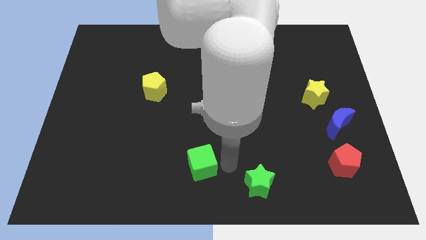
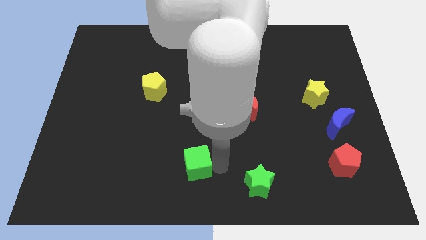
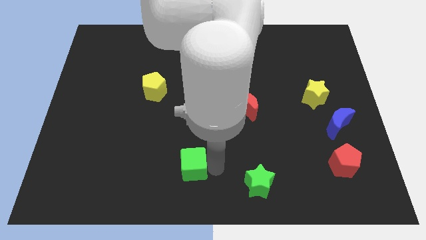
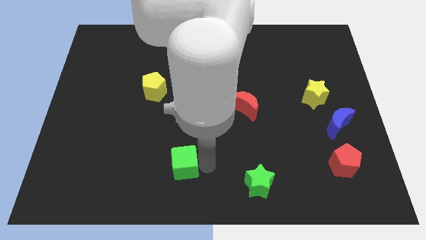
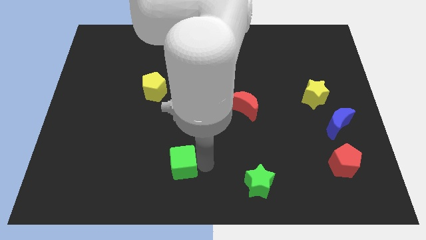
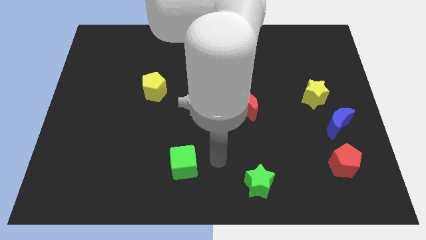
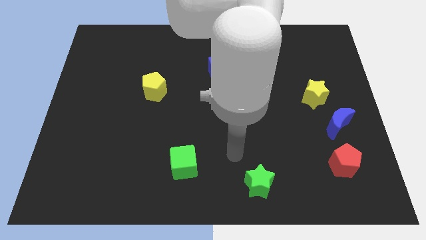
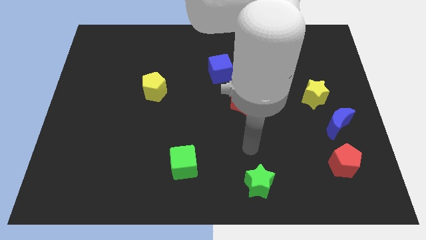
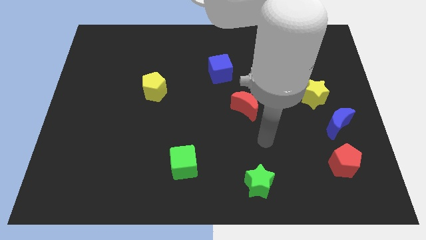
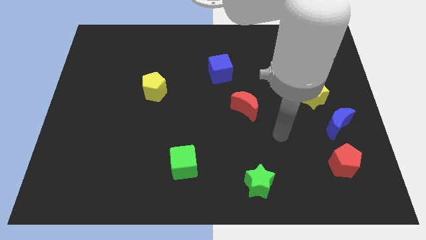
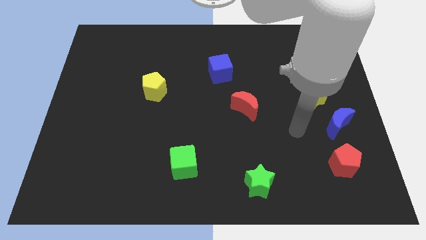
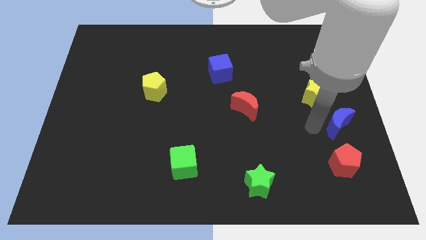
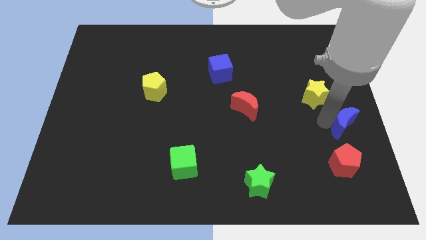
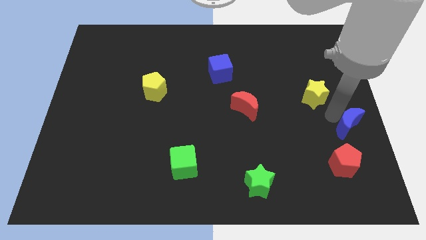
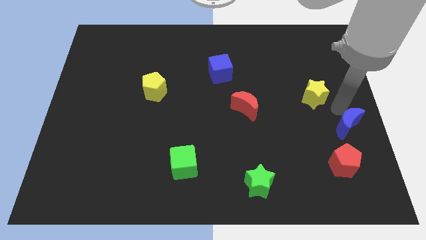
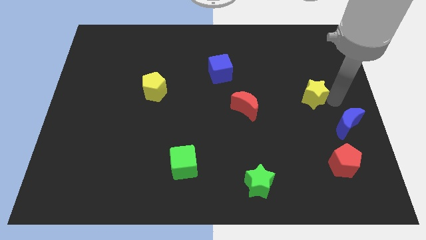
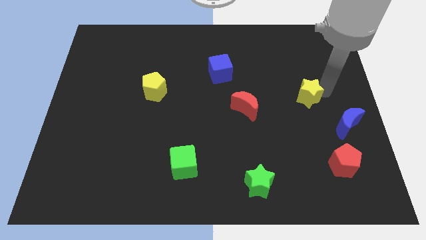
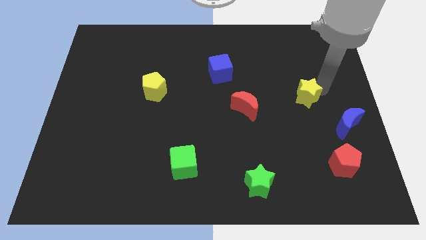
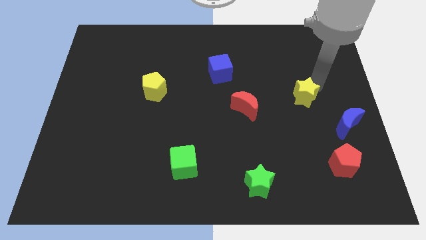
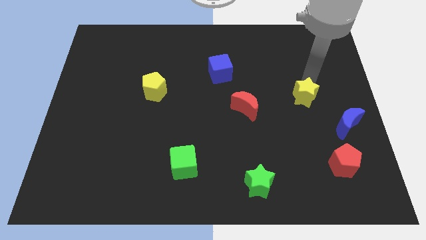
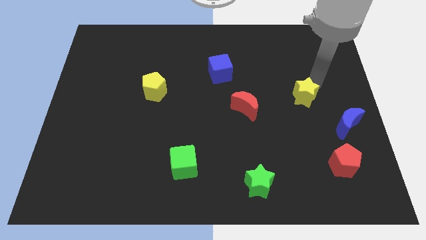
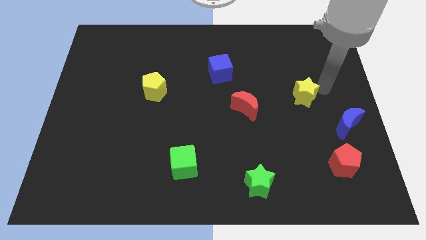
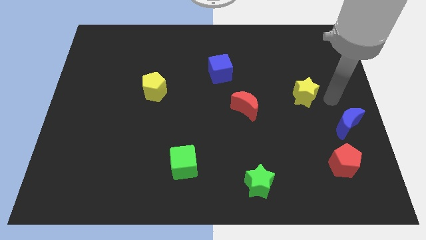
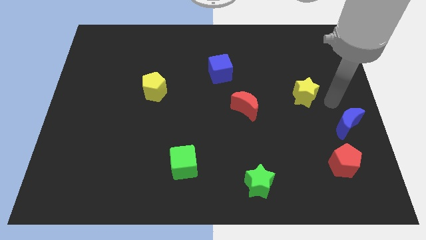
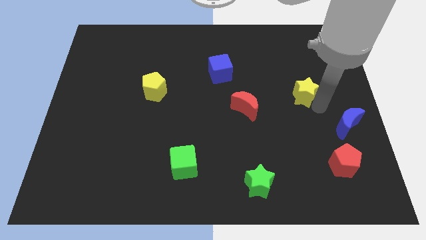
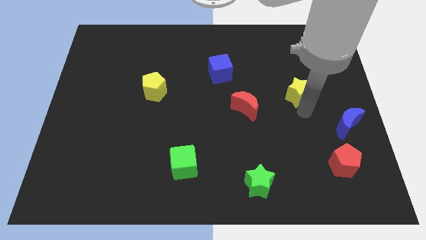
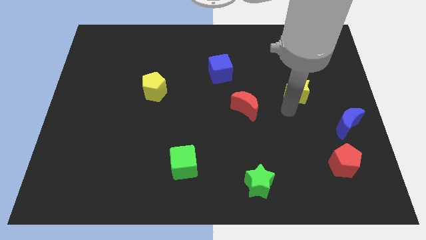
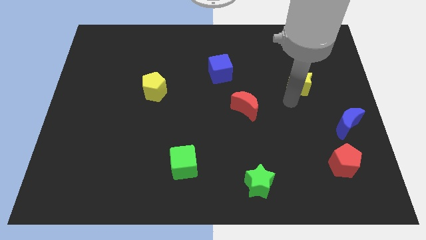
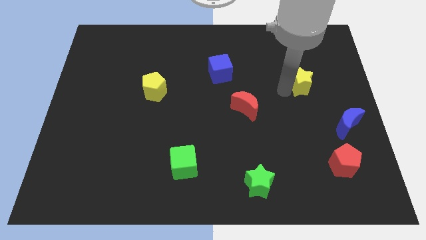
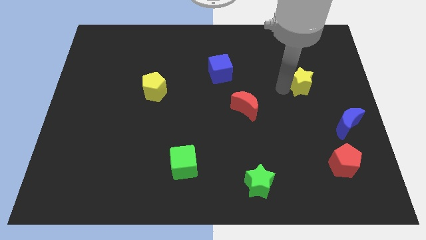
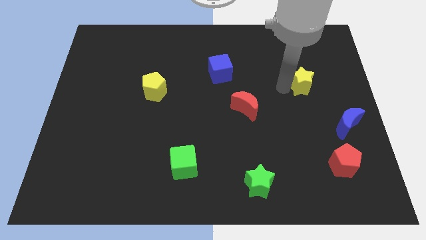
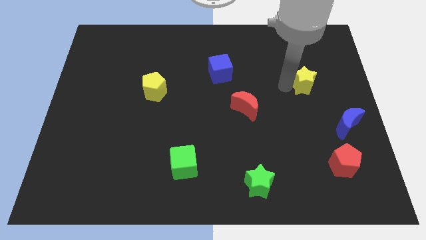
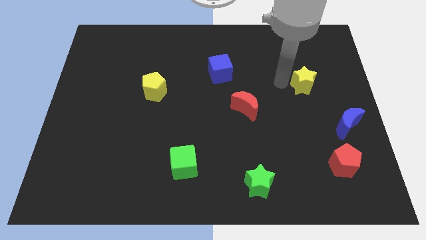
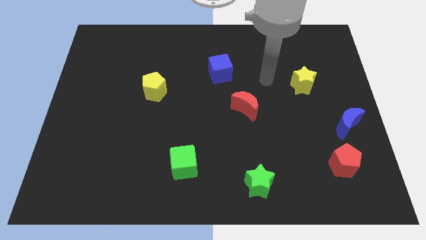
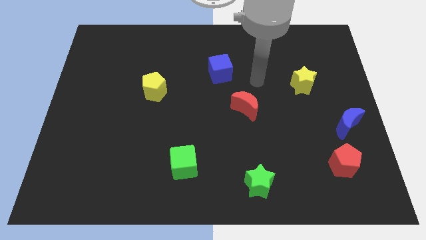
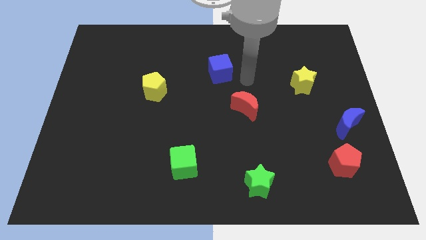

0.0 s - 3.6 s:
move your arm away from the green cube

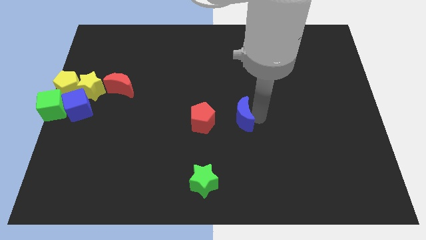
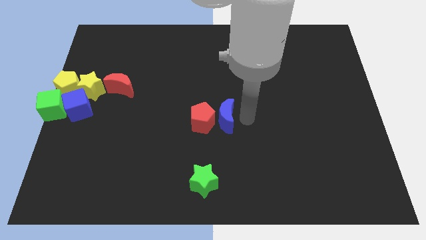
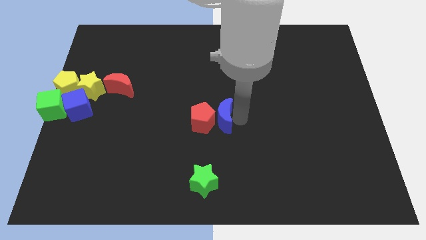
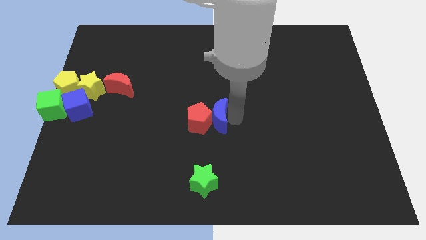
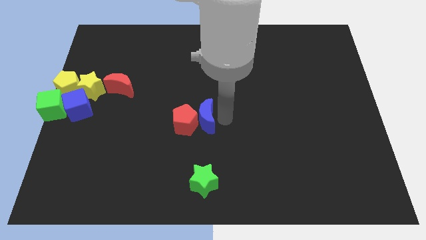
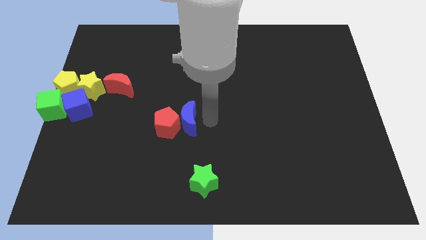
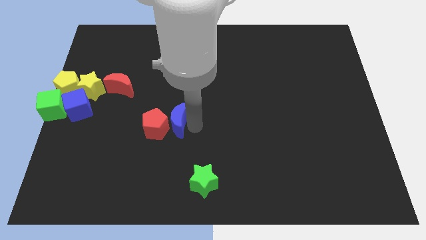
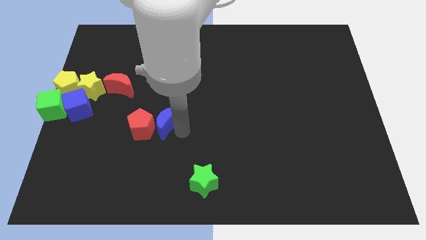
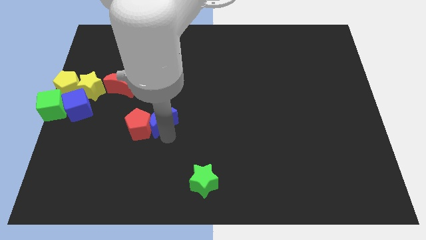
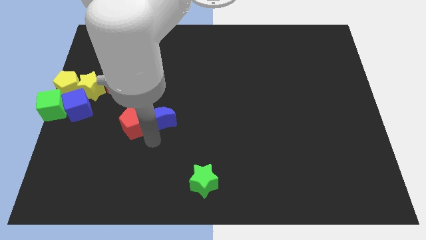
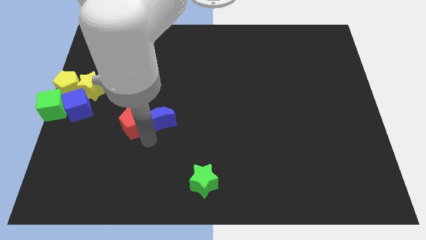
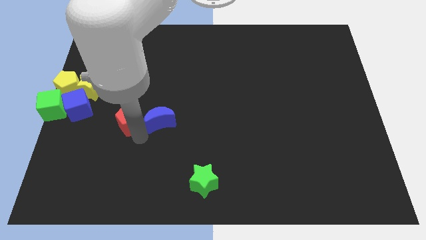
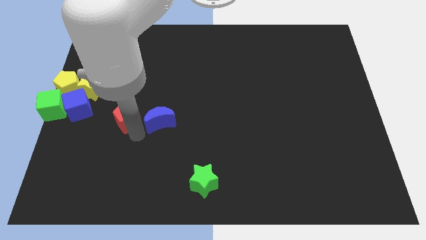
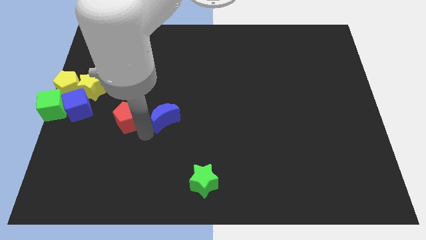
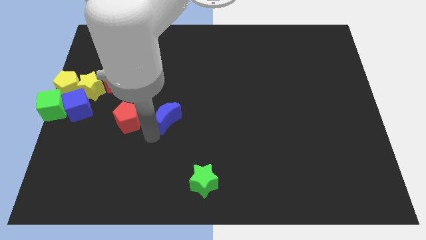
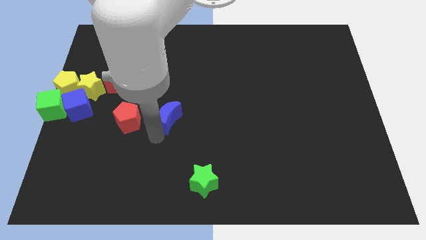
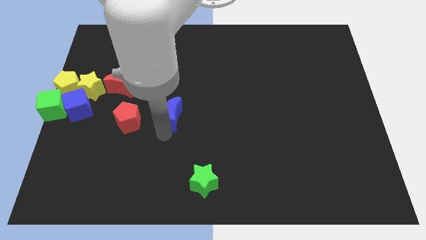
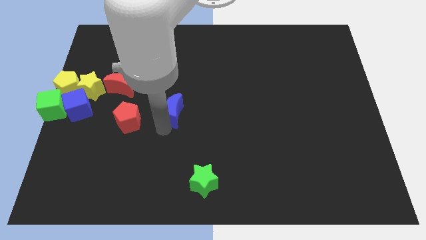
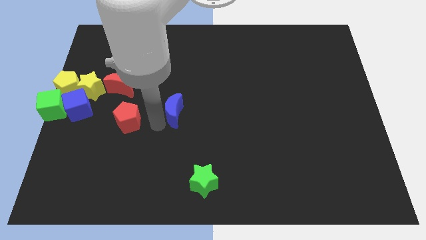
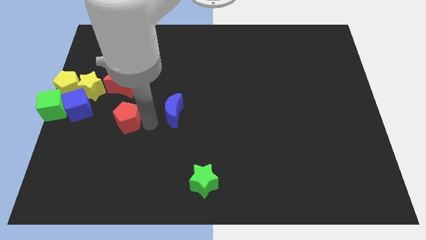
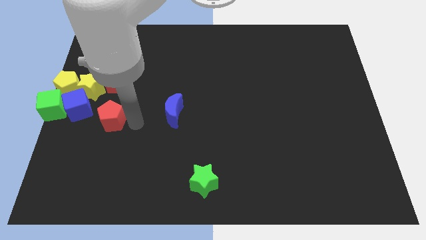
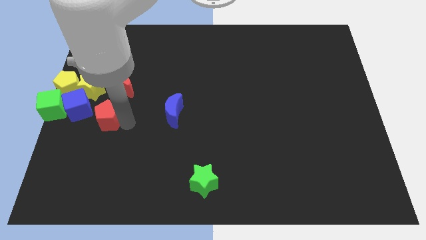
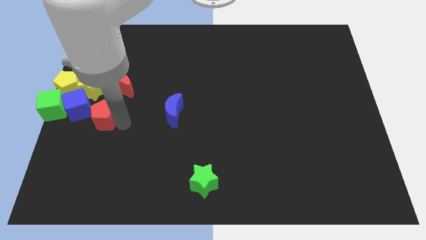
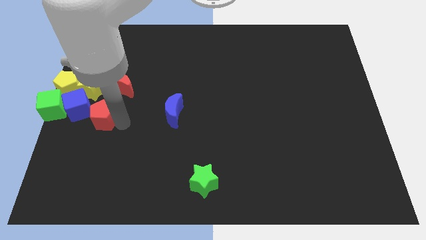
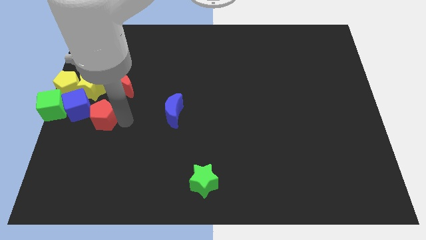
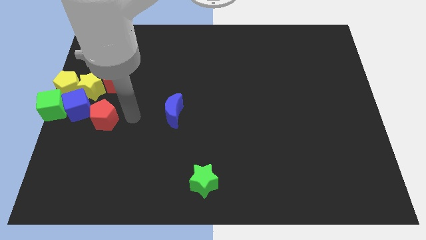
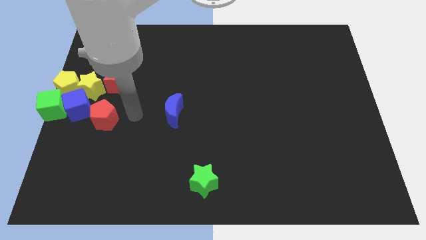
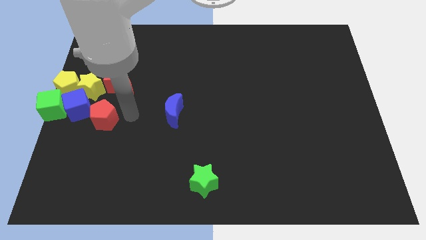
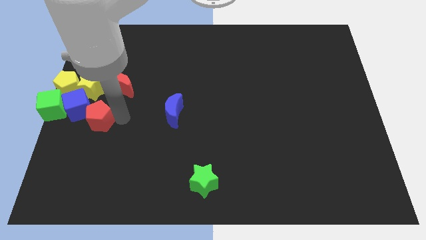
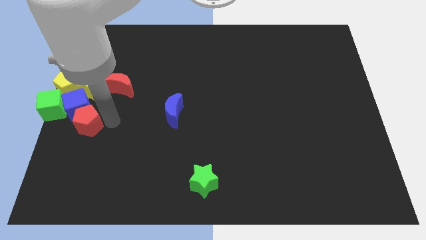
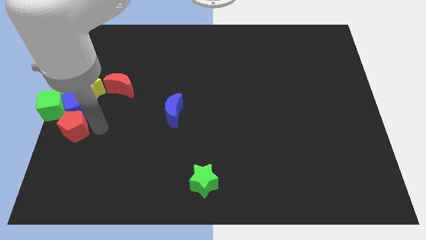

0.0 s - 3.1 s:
place the red pentagon down to the blue cube

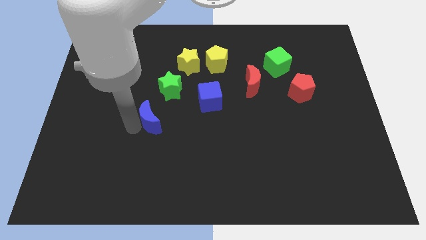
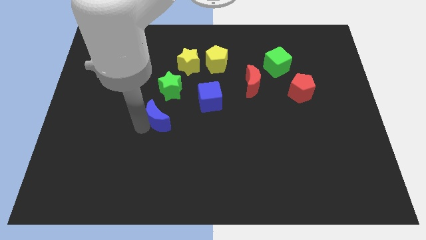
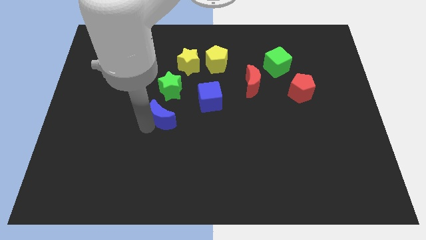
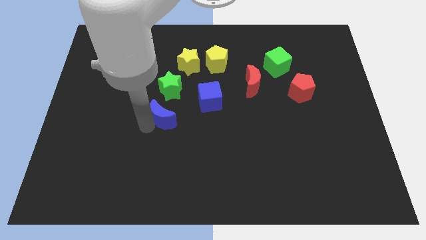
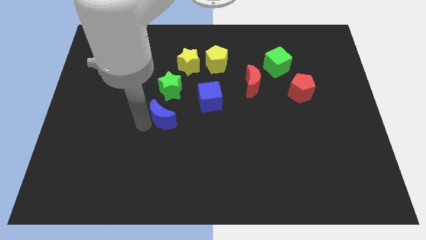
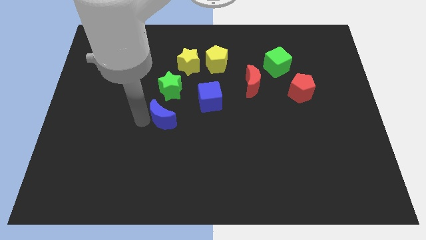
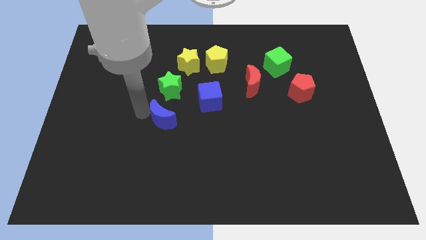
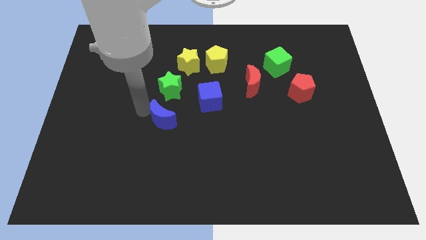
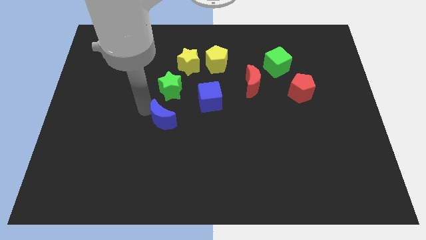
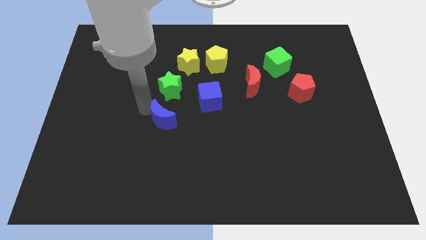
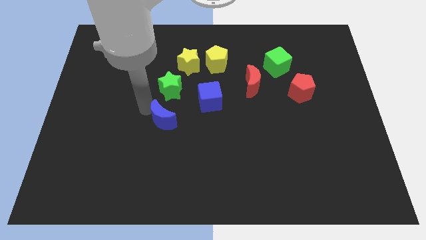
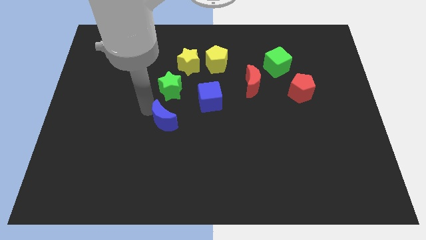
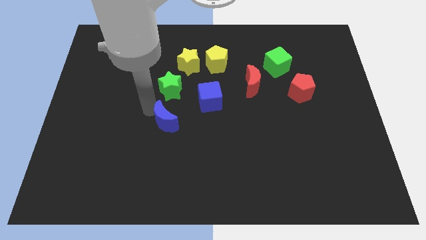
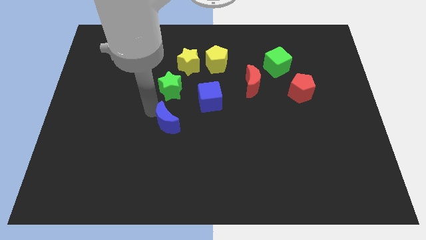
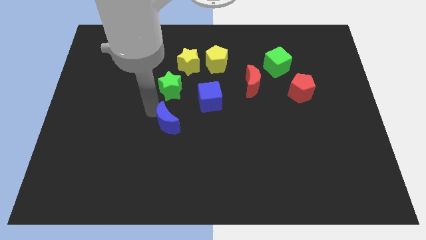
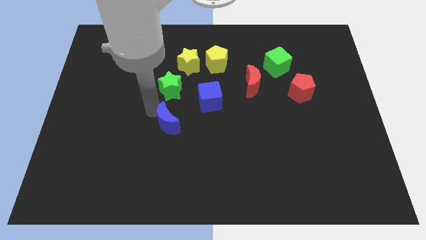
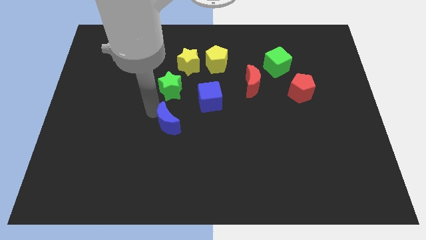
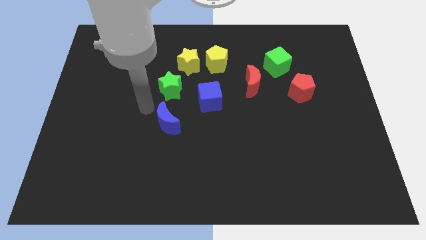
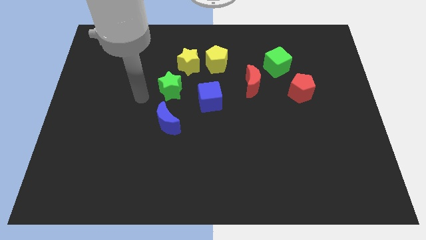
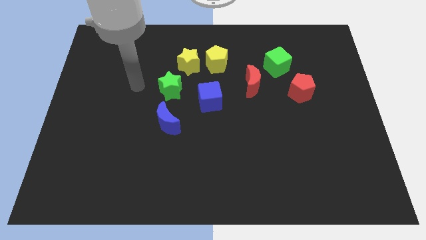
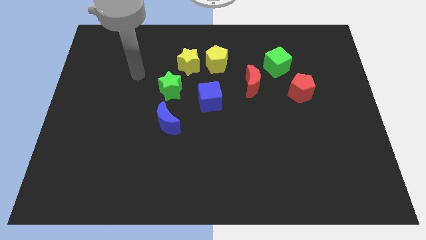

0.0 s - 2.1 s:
push blue moon below green star
